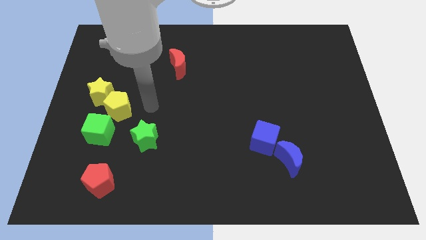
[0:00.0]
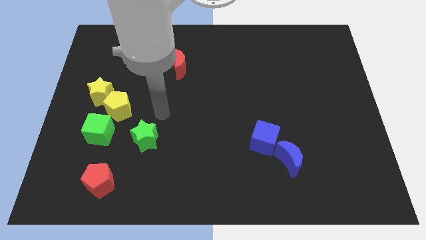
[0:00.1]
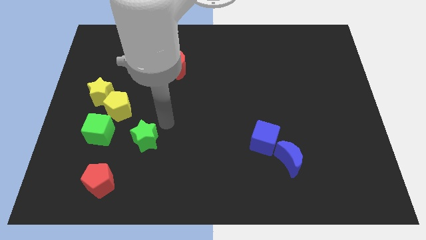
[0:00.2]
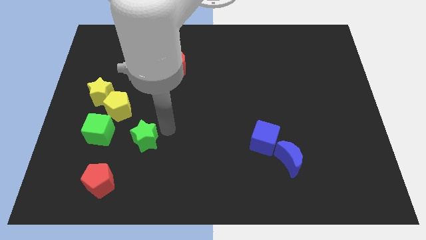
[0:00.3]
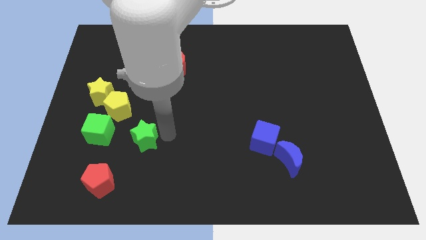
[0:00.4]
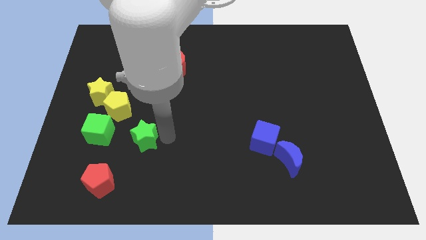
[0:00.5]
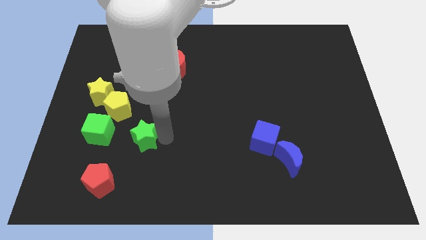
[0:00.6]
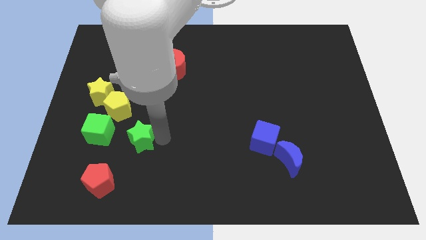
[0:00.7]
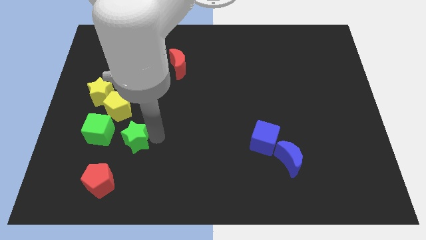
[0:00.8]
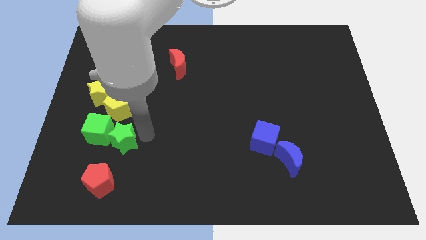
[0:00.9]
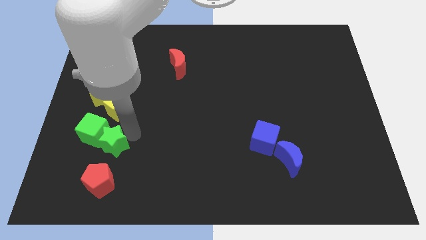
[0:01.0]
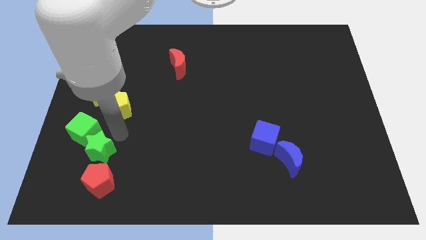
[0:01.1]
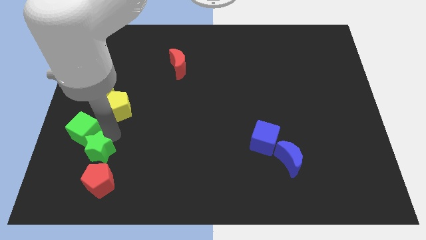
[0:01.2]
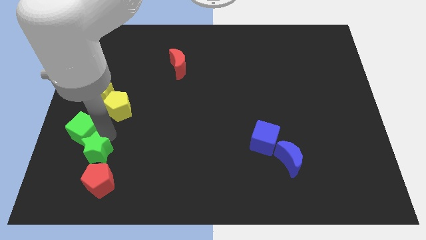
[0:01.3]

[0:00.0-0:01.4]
push the green star into the right side of the green cube

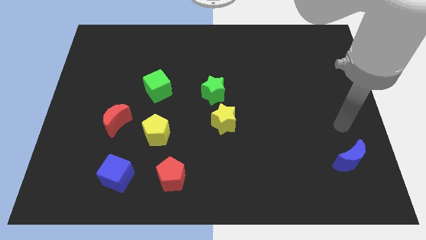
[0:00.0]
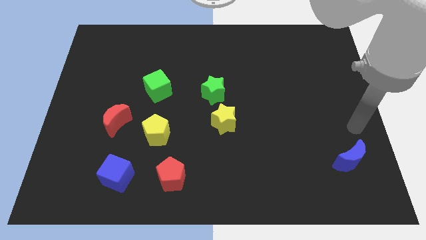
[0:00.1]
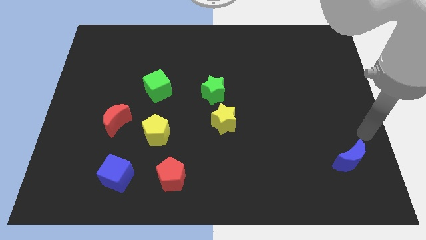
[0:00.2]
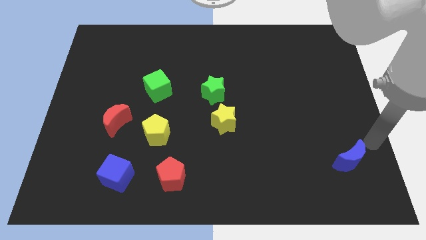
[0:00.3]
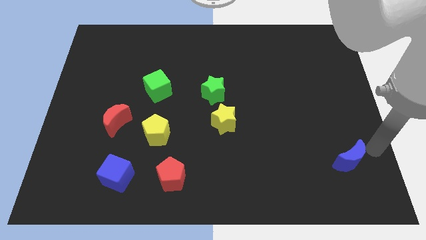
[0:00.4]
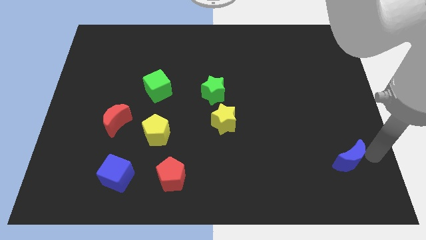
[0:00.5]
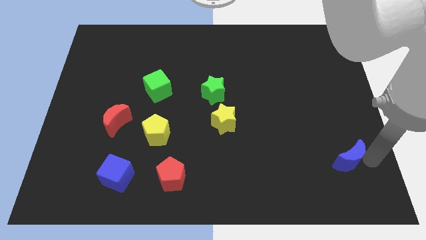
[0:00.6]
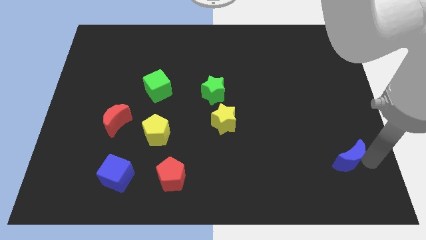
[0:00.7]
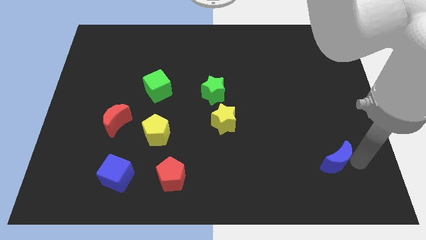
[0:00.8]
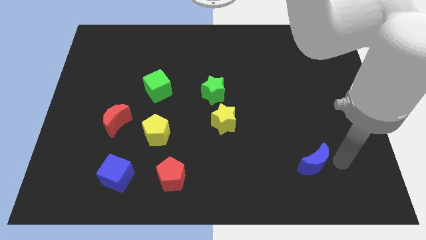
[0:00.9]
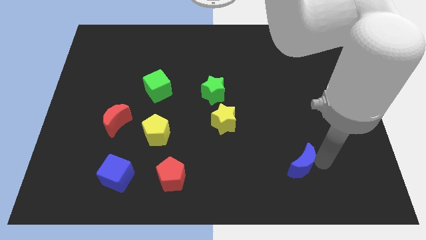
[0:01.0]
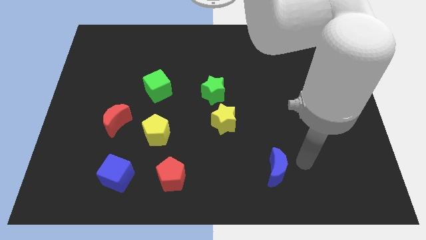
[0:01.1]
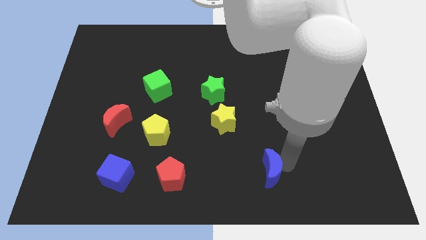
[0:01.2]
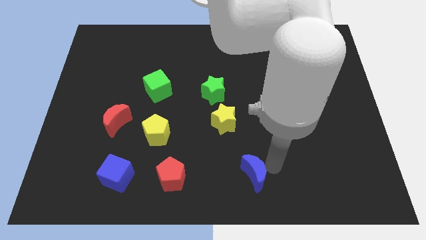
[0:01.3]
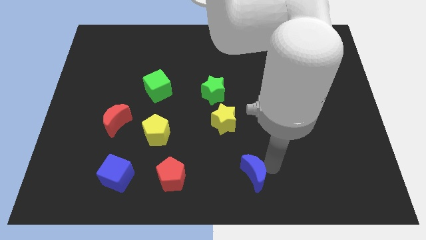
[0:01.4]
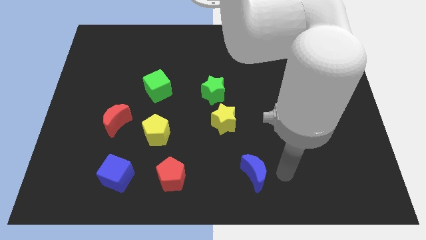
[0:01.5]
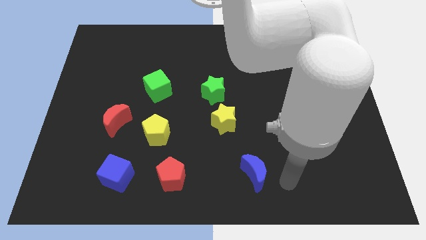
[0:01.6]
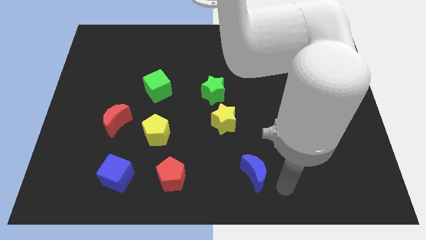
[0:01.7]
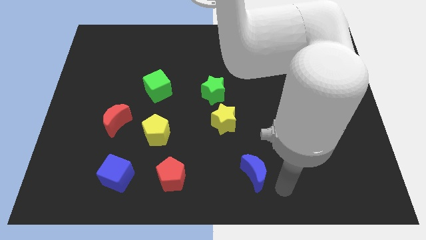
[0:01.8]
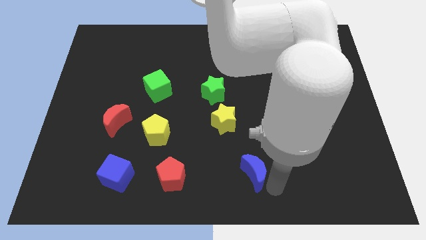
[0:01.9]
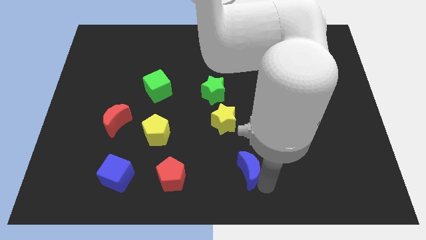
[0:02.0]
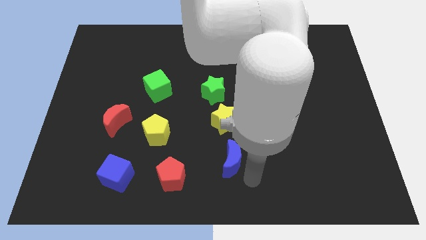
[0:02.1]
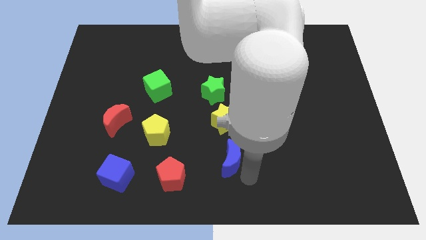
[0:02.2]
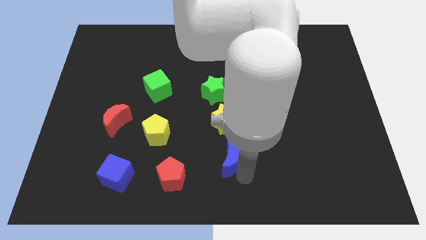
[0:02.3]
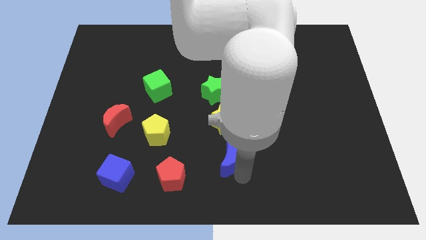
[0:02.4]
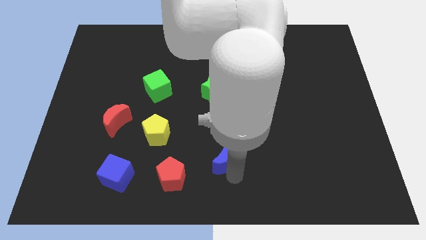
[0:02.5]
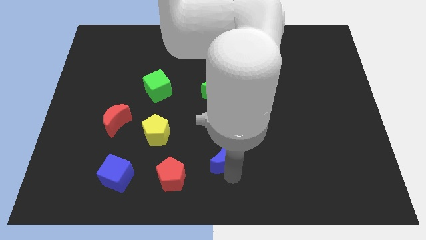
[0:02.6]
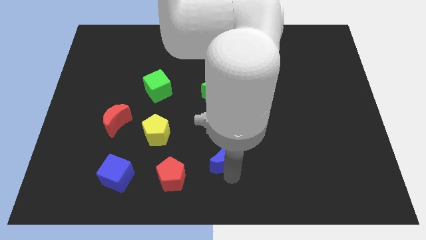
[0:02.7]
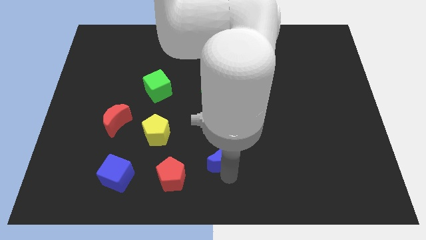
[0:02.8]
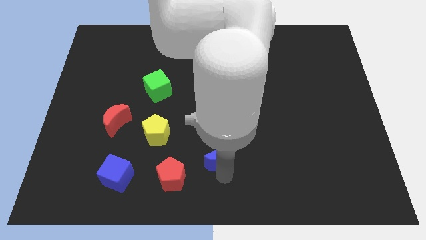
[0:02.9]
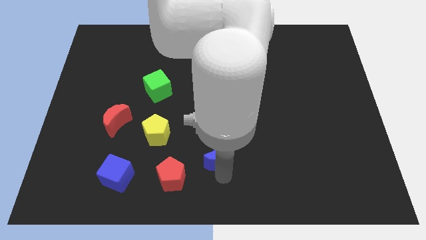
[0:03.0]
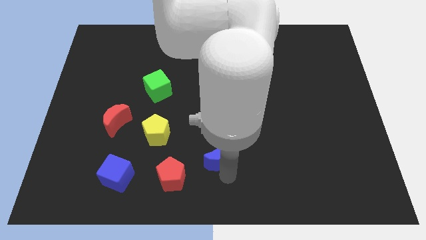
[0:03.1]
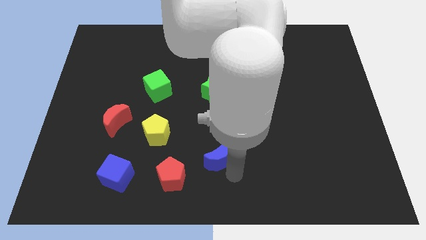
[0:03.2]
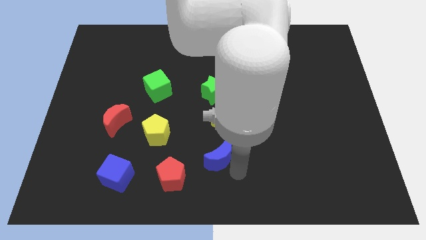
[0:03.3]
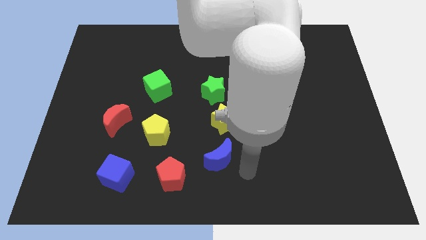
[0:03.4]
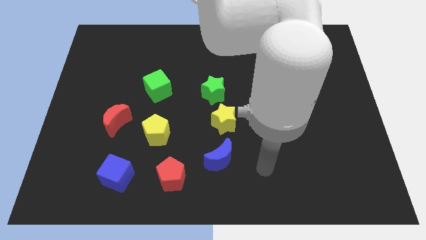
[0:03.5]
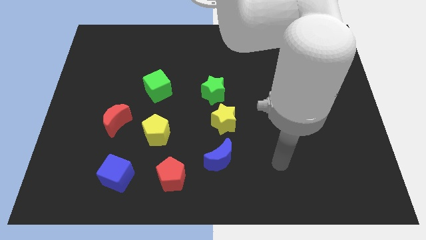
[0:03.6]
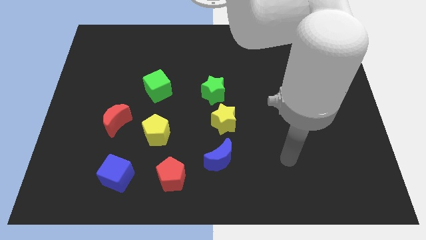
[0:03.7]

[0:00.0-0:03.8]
place the blue moon in between the red pentagon and the yellow star

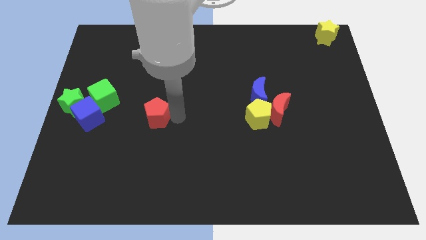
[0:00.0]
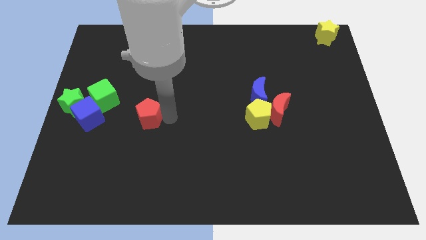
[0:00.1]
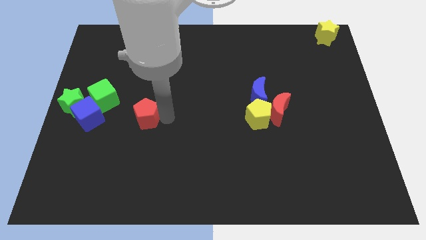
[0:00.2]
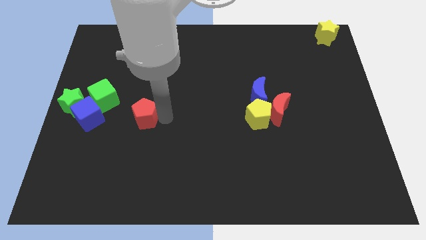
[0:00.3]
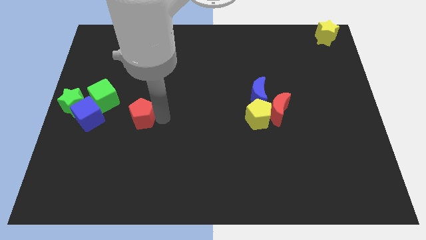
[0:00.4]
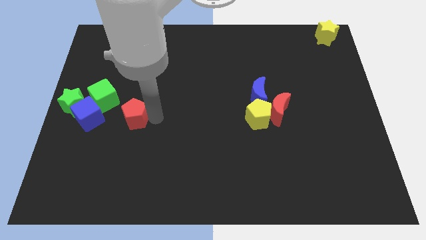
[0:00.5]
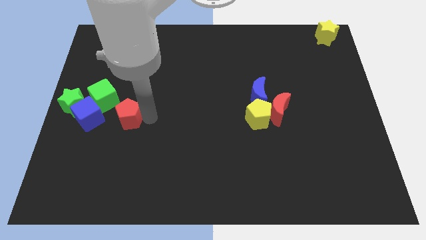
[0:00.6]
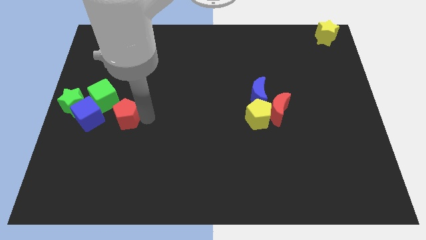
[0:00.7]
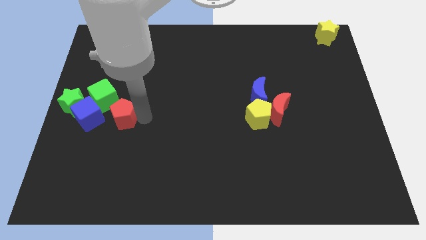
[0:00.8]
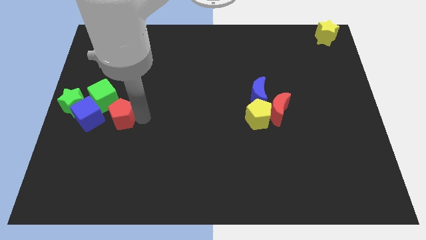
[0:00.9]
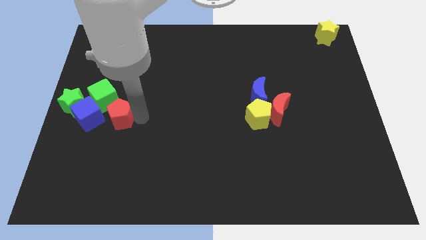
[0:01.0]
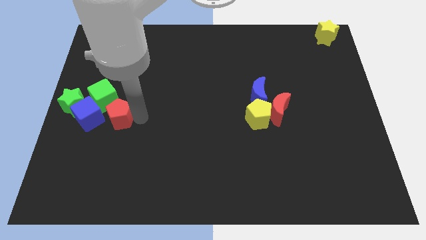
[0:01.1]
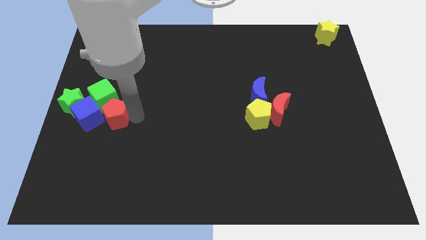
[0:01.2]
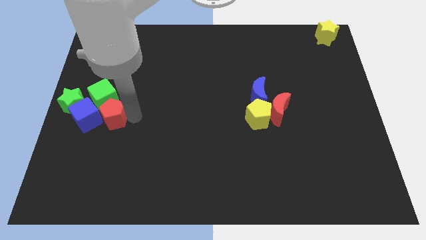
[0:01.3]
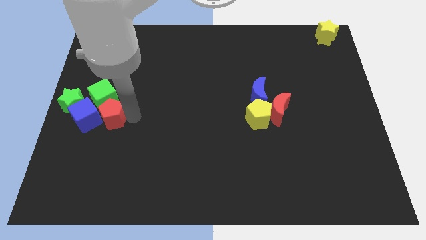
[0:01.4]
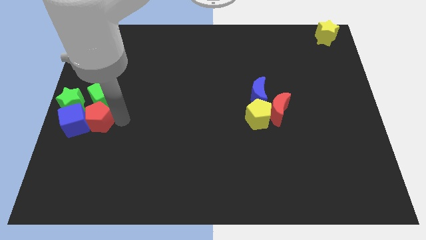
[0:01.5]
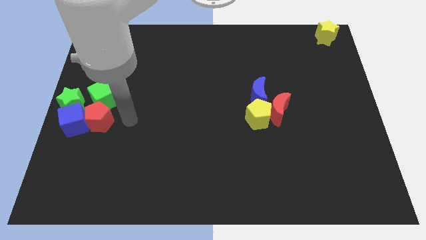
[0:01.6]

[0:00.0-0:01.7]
drag the red pentagon into the right side of the blue cube

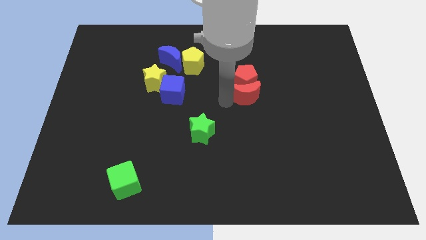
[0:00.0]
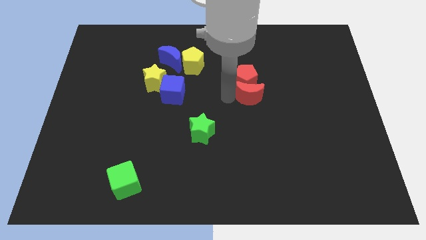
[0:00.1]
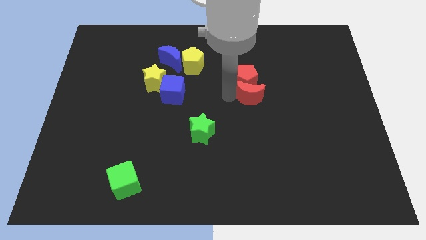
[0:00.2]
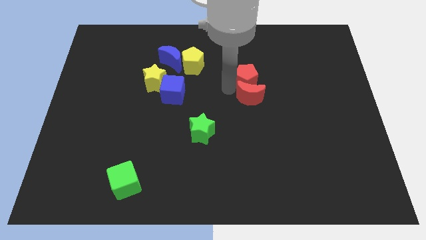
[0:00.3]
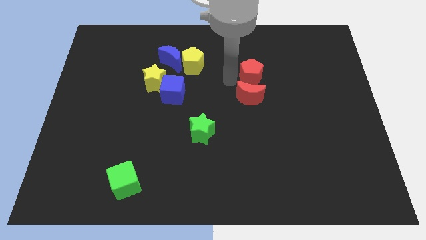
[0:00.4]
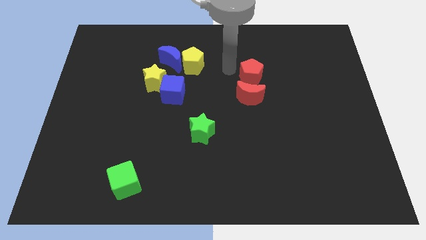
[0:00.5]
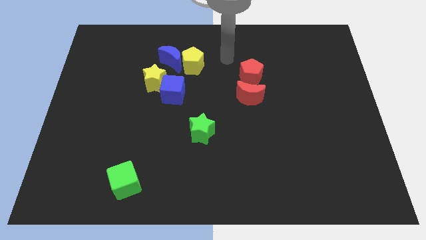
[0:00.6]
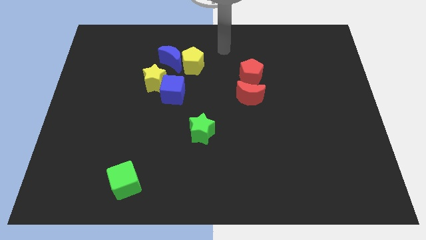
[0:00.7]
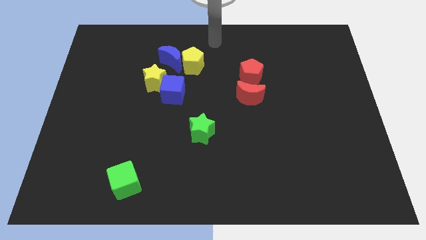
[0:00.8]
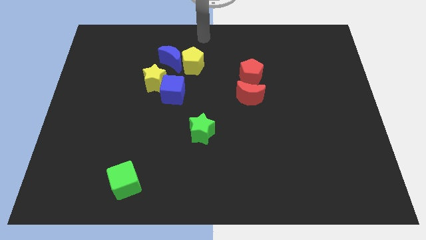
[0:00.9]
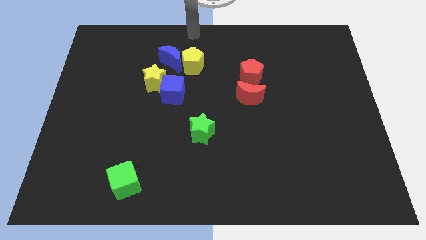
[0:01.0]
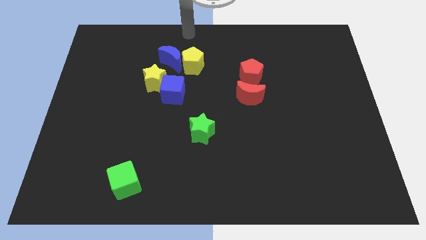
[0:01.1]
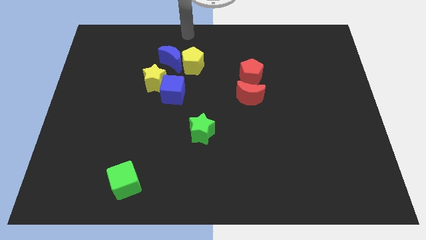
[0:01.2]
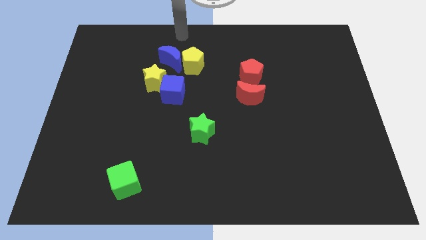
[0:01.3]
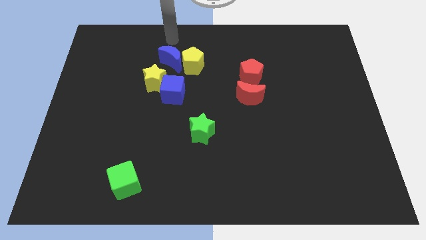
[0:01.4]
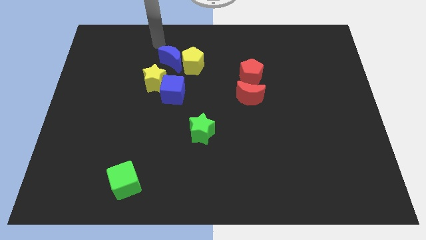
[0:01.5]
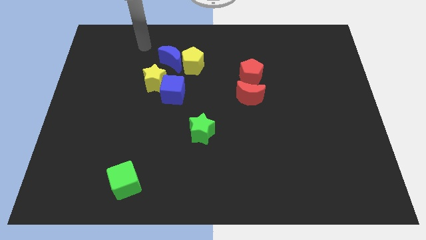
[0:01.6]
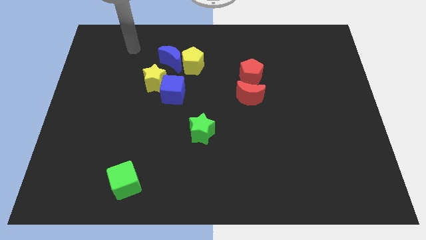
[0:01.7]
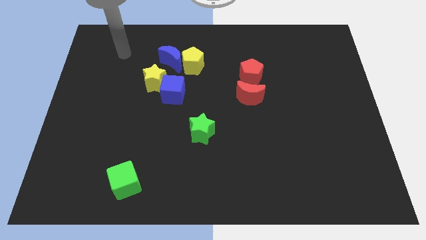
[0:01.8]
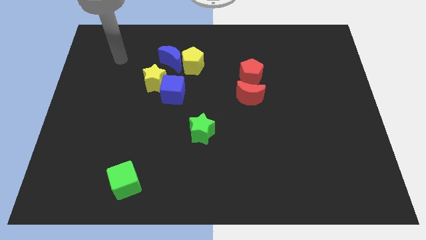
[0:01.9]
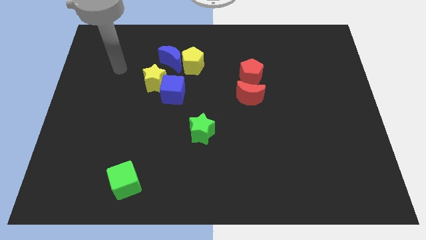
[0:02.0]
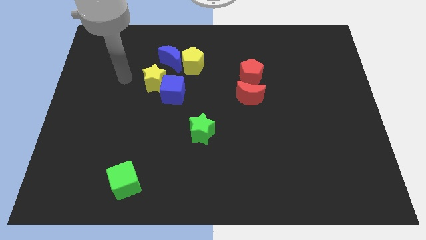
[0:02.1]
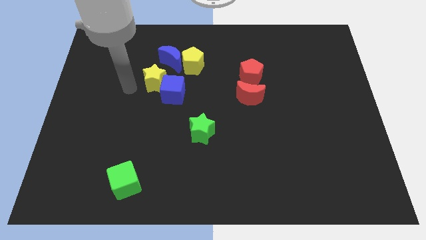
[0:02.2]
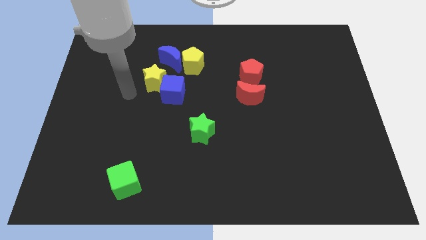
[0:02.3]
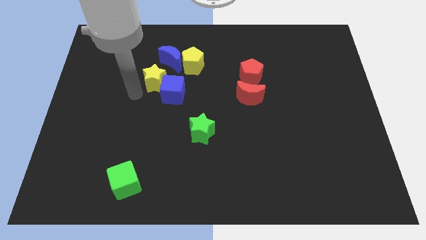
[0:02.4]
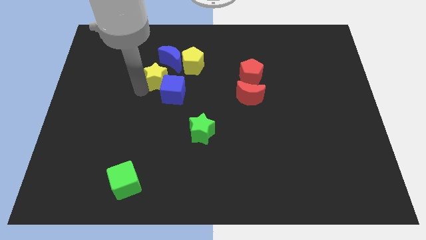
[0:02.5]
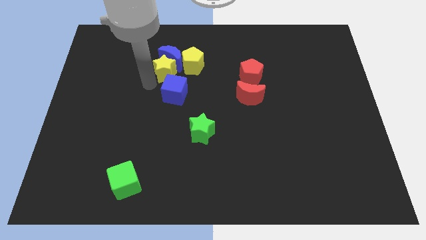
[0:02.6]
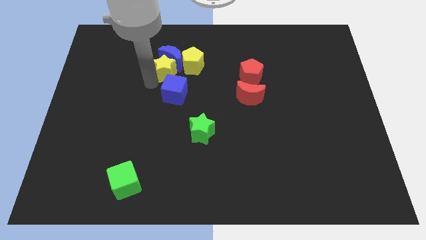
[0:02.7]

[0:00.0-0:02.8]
push yellow star into the blue moon
